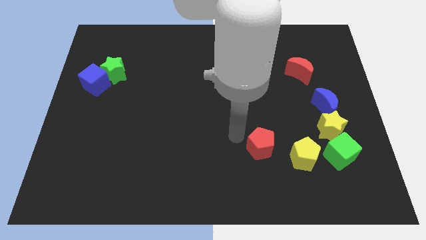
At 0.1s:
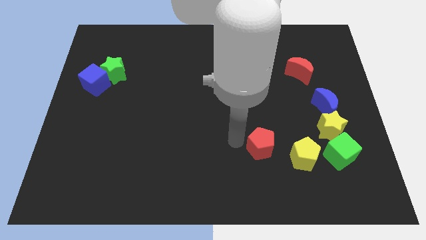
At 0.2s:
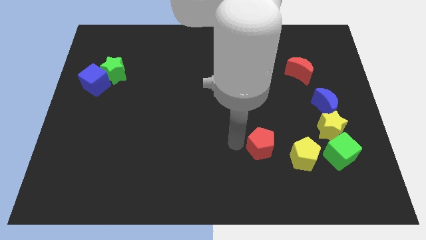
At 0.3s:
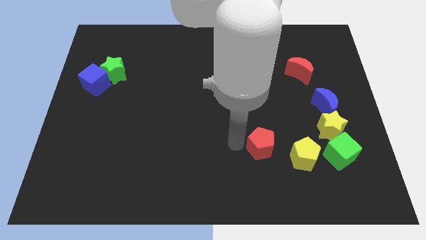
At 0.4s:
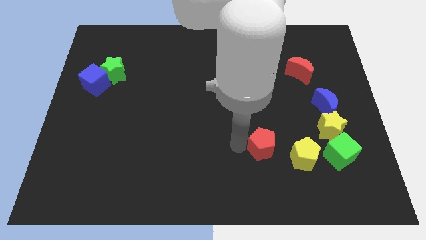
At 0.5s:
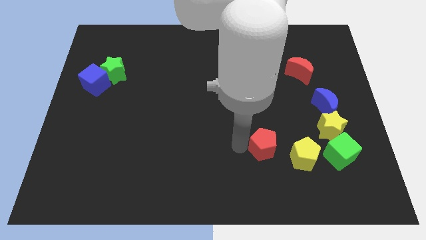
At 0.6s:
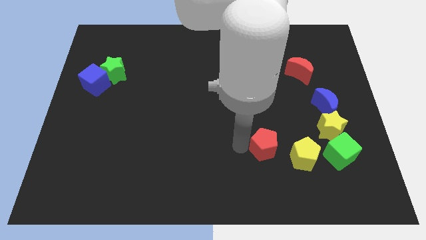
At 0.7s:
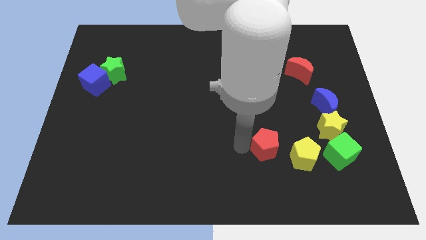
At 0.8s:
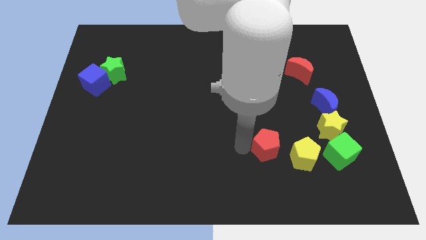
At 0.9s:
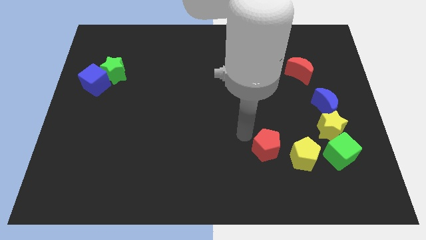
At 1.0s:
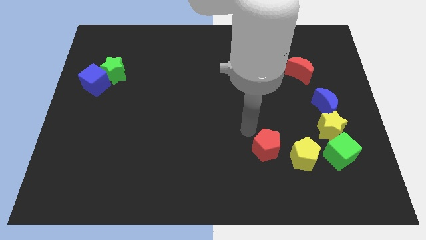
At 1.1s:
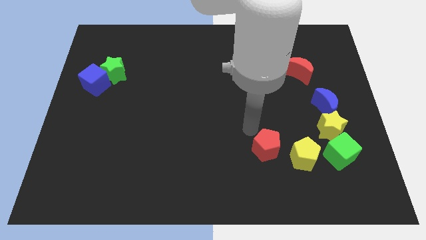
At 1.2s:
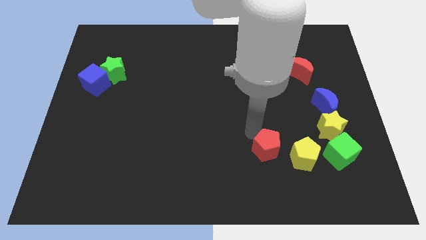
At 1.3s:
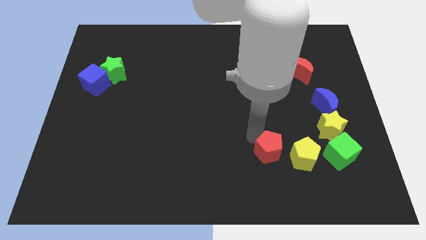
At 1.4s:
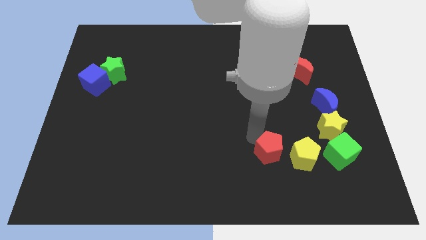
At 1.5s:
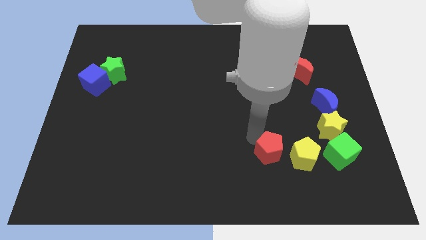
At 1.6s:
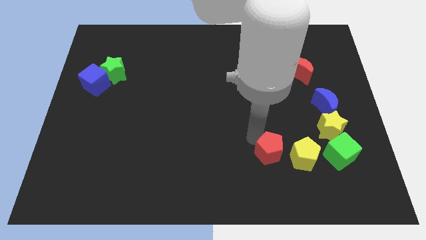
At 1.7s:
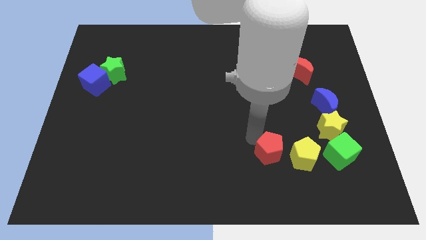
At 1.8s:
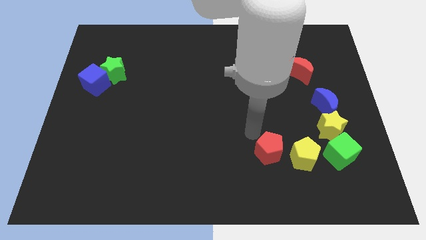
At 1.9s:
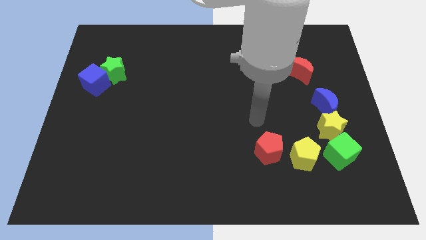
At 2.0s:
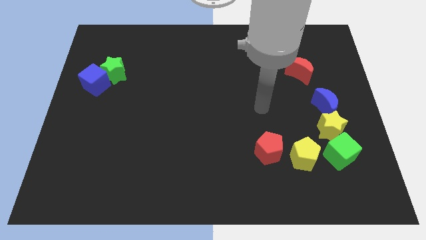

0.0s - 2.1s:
push red pentagon towards yellow pentagon

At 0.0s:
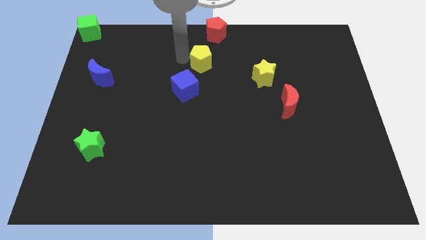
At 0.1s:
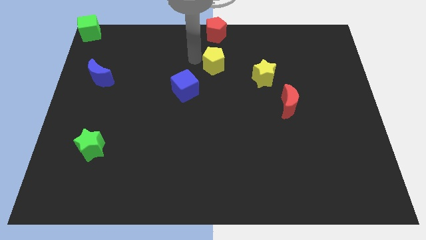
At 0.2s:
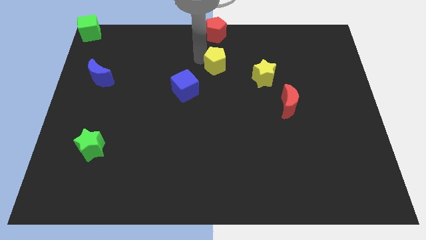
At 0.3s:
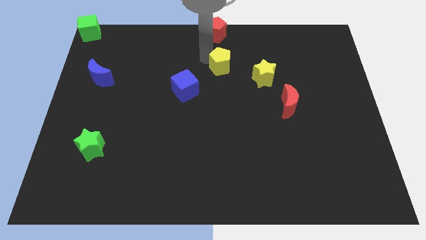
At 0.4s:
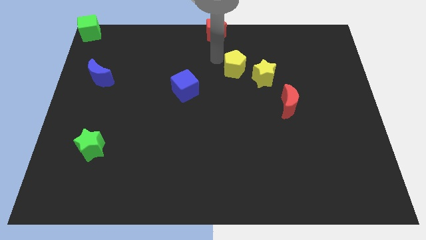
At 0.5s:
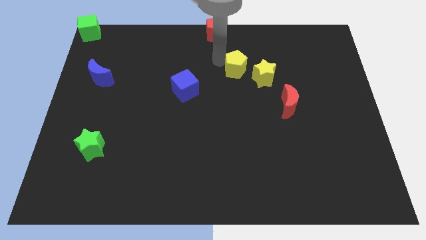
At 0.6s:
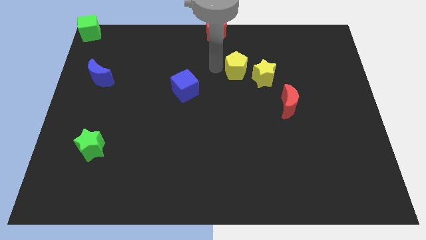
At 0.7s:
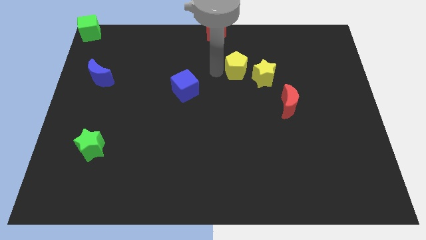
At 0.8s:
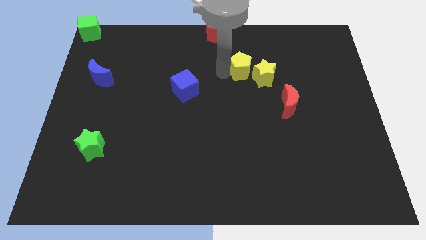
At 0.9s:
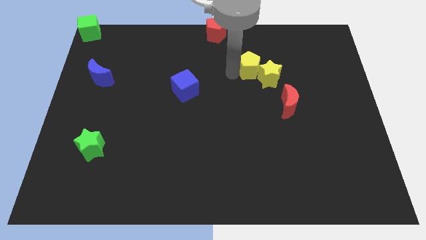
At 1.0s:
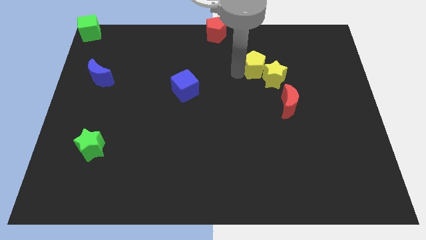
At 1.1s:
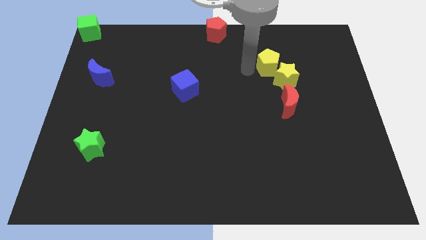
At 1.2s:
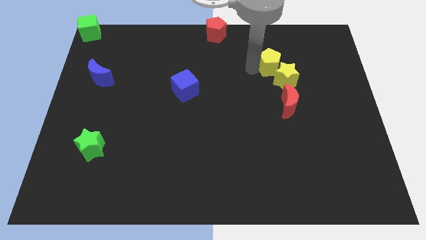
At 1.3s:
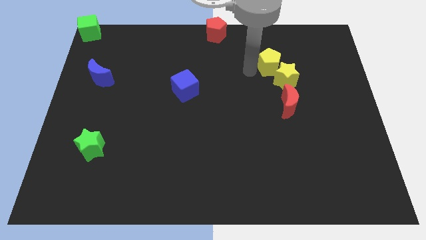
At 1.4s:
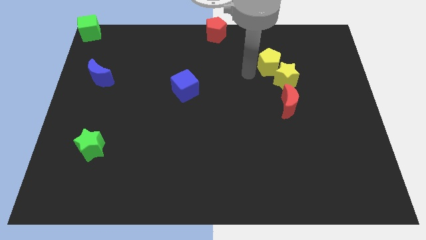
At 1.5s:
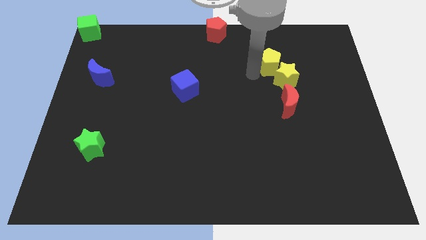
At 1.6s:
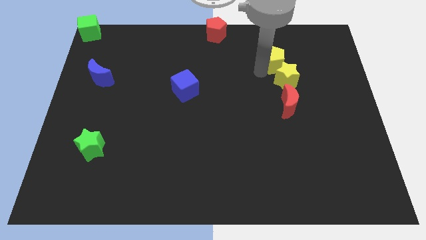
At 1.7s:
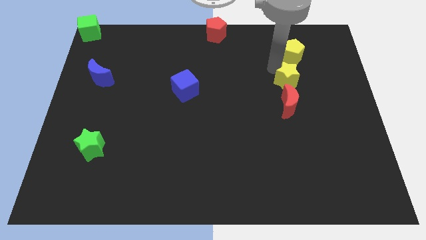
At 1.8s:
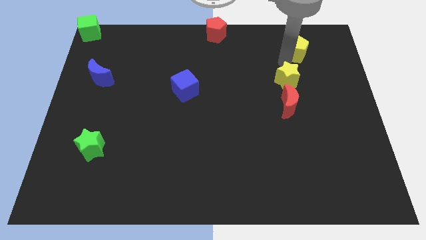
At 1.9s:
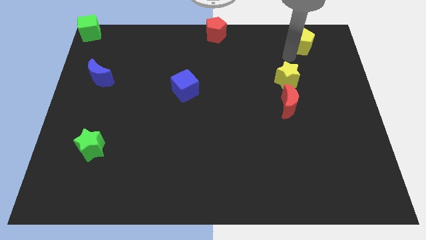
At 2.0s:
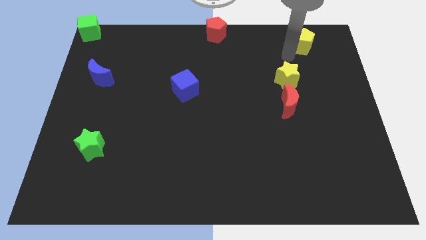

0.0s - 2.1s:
separate the yellow star and yellow pentagon

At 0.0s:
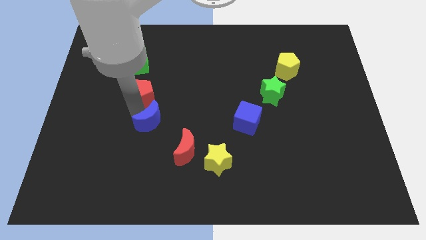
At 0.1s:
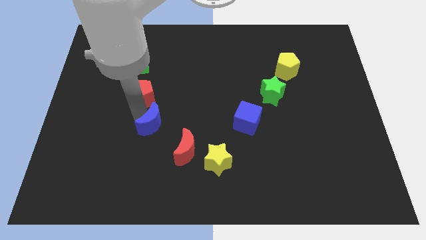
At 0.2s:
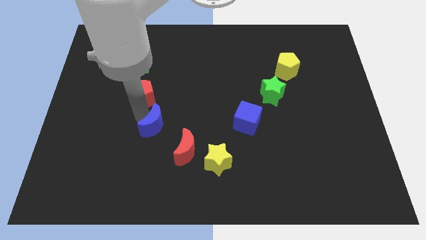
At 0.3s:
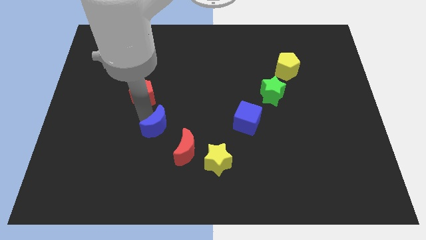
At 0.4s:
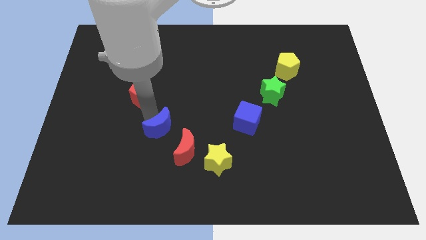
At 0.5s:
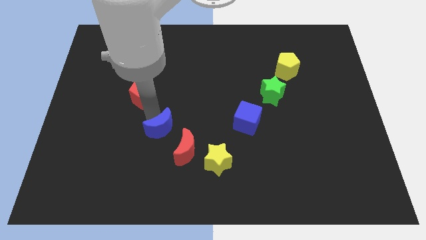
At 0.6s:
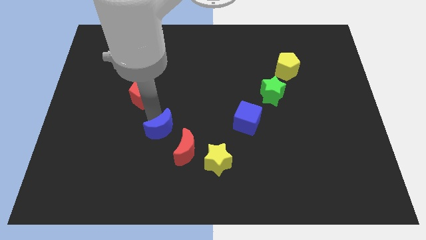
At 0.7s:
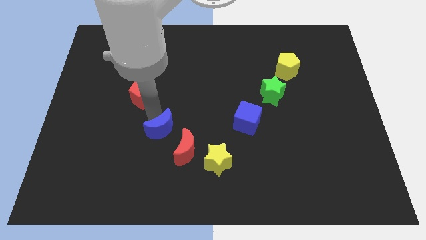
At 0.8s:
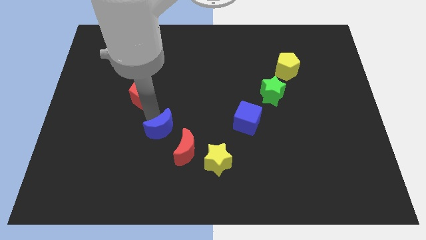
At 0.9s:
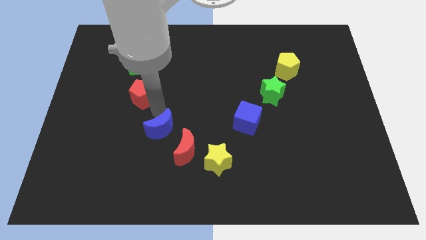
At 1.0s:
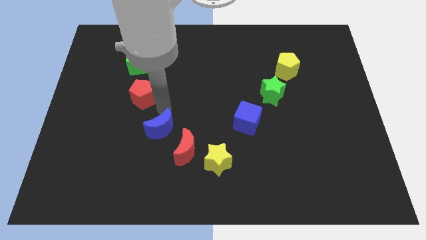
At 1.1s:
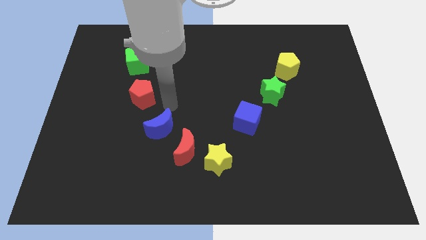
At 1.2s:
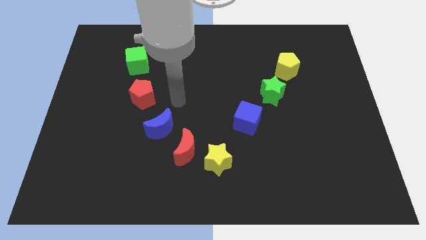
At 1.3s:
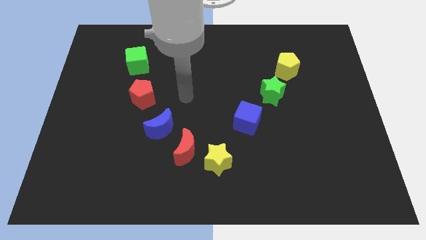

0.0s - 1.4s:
move the blue crescent to the top left side of the red crescent

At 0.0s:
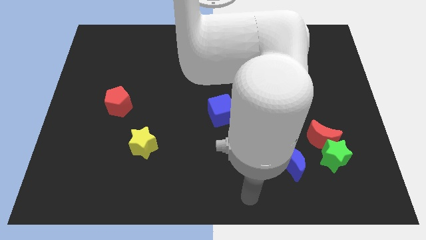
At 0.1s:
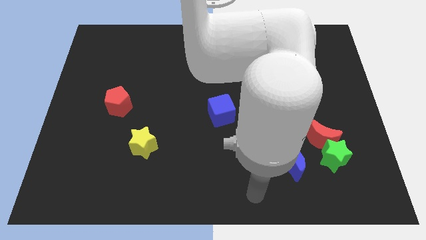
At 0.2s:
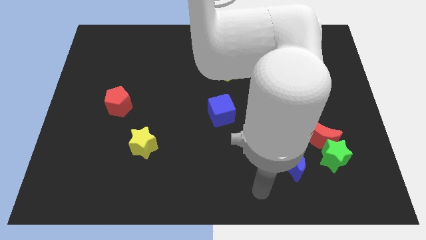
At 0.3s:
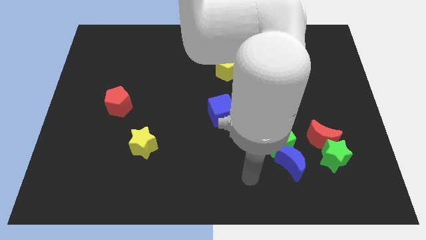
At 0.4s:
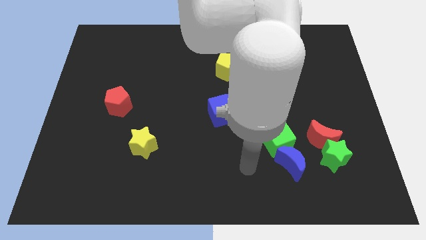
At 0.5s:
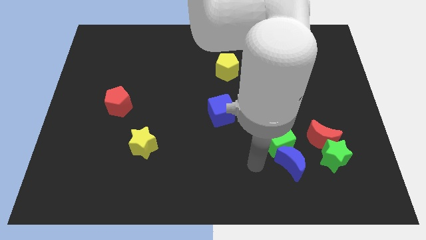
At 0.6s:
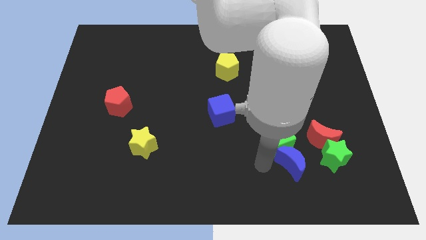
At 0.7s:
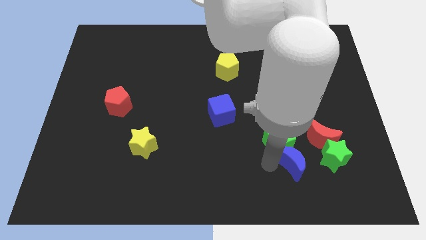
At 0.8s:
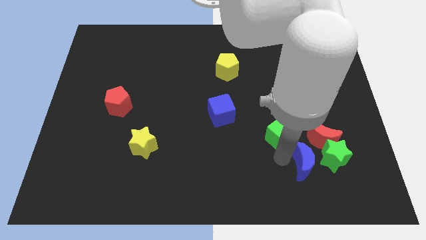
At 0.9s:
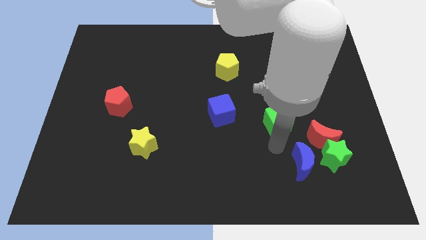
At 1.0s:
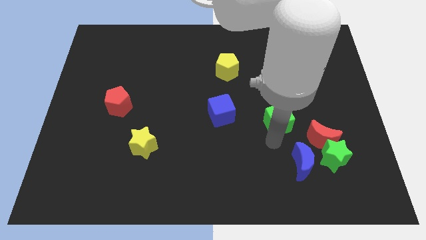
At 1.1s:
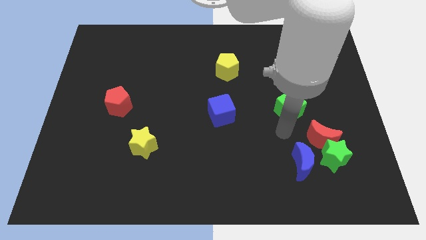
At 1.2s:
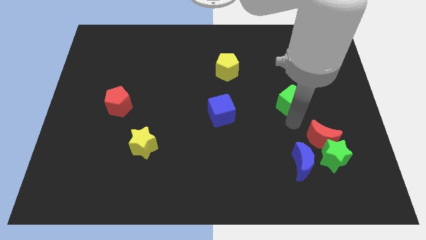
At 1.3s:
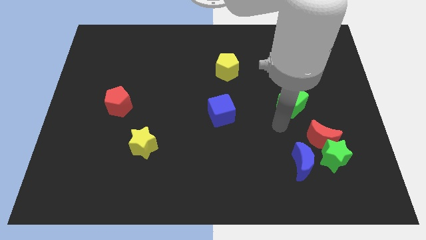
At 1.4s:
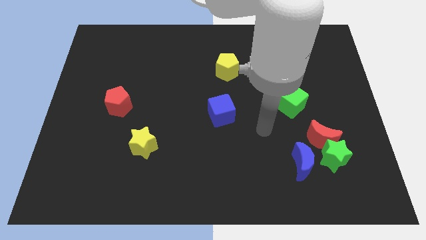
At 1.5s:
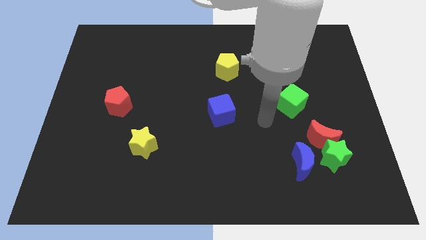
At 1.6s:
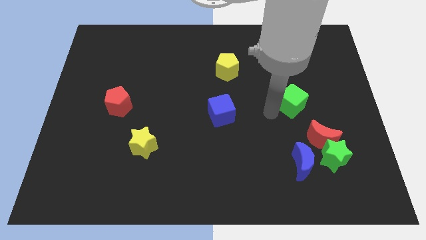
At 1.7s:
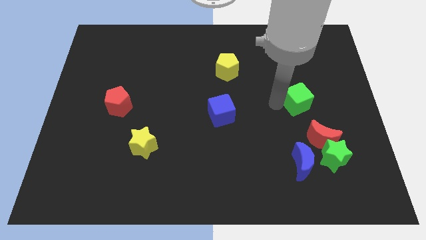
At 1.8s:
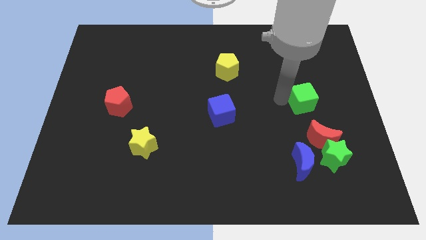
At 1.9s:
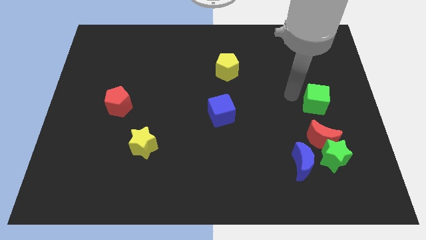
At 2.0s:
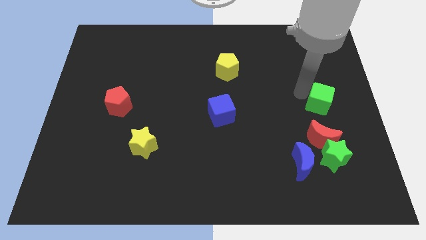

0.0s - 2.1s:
place the green cube above the red moon

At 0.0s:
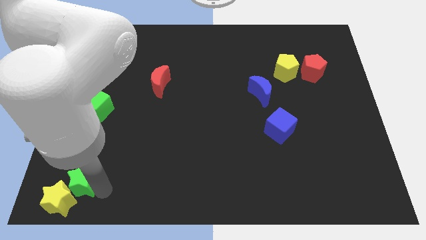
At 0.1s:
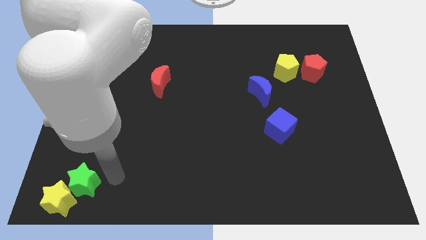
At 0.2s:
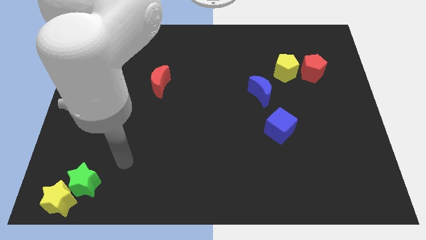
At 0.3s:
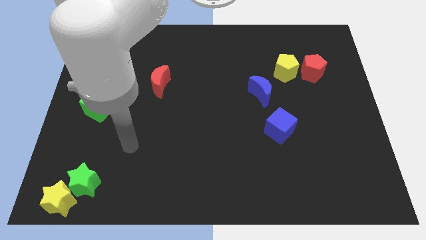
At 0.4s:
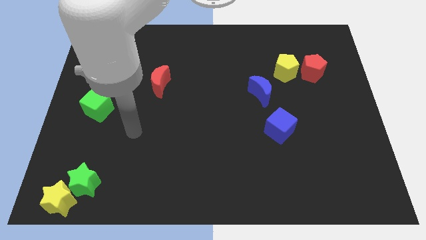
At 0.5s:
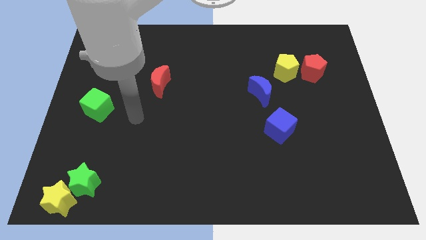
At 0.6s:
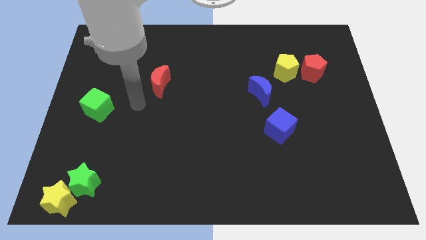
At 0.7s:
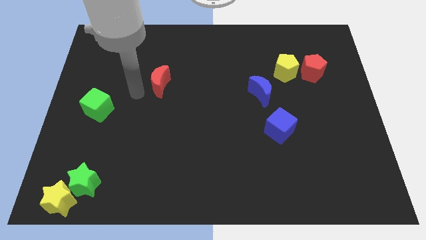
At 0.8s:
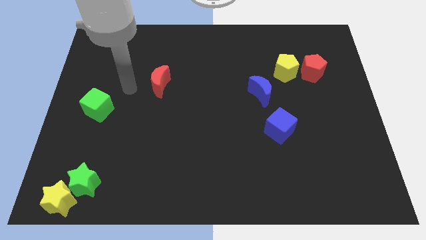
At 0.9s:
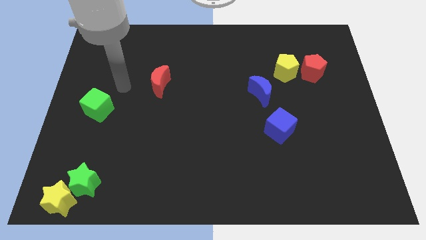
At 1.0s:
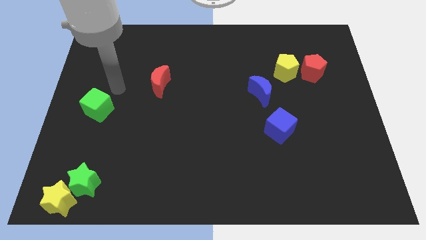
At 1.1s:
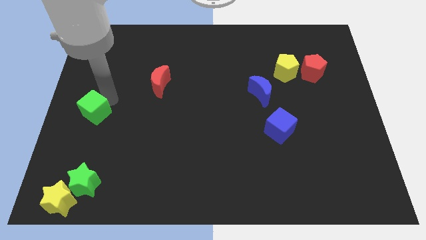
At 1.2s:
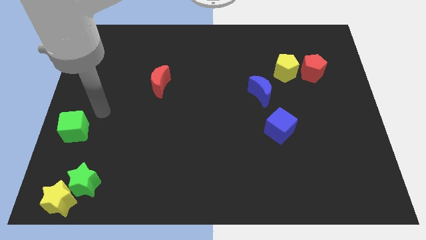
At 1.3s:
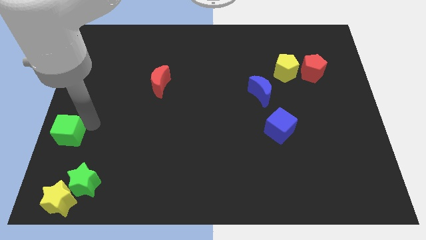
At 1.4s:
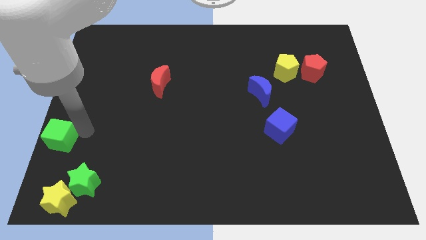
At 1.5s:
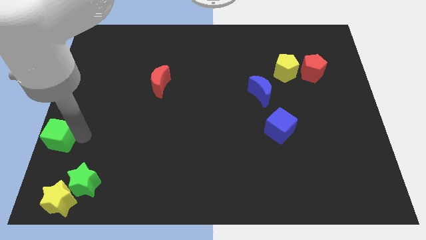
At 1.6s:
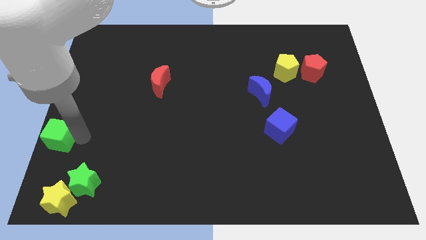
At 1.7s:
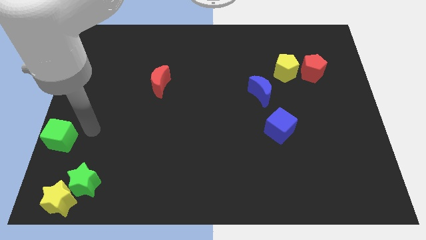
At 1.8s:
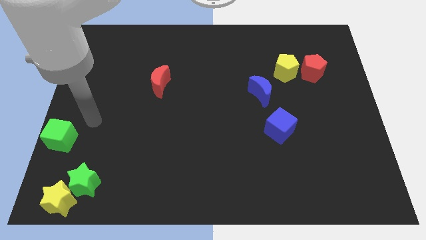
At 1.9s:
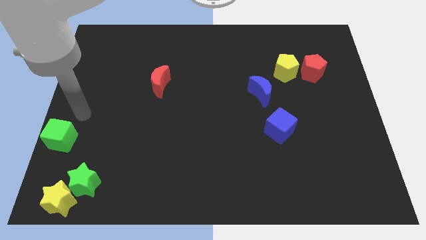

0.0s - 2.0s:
move the green cube diagonally top left to the green star
